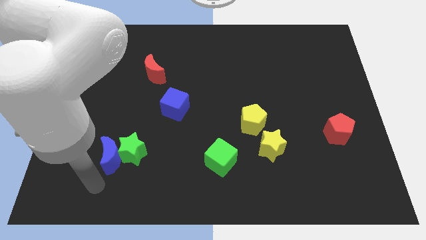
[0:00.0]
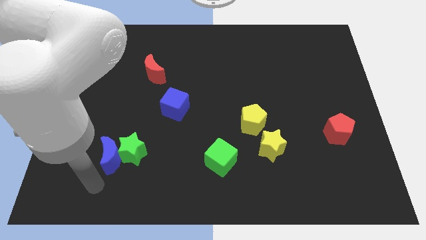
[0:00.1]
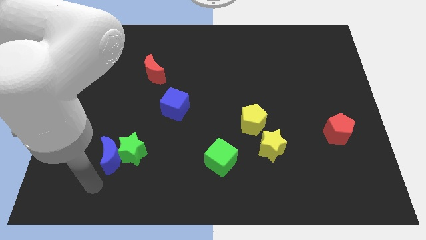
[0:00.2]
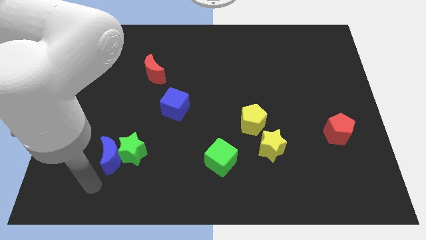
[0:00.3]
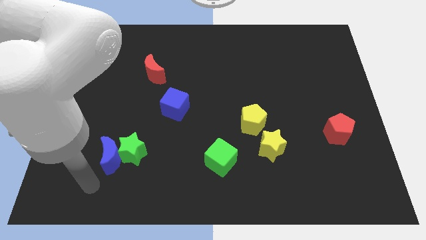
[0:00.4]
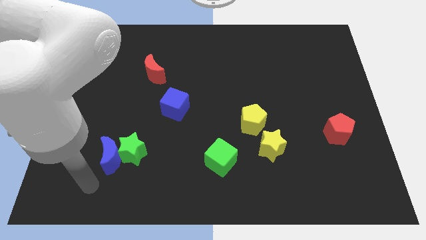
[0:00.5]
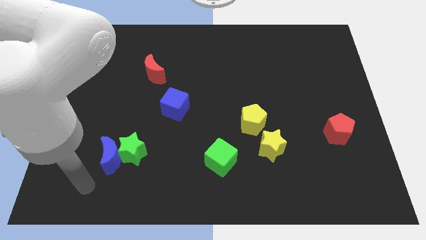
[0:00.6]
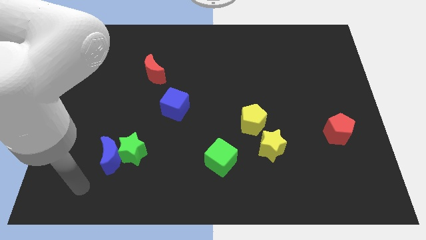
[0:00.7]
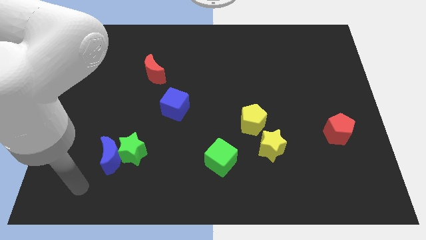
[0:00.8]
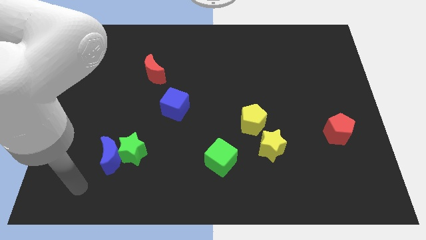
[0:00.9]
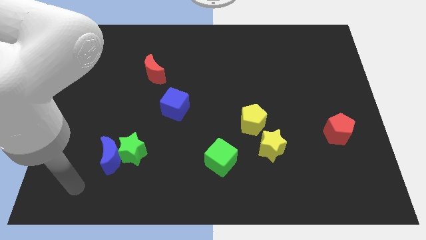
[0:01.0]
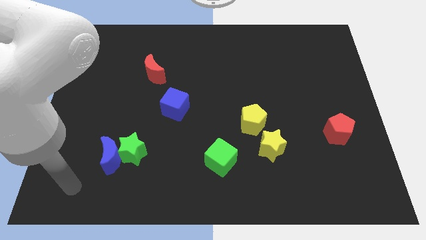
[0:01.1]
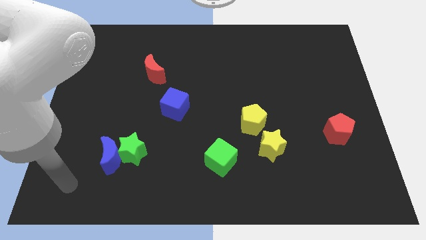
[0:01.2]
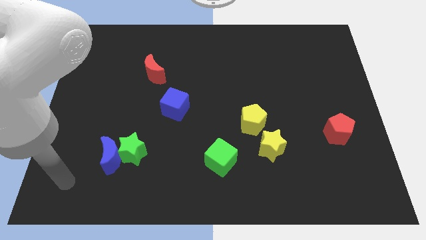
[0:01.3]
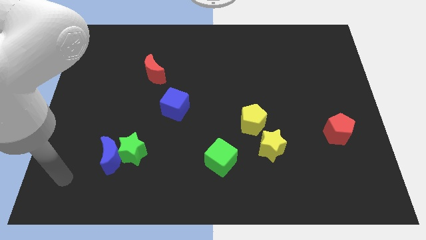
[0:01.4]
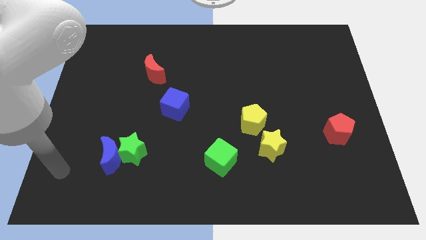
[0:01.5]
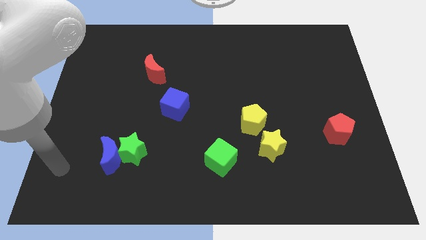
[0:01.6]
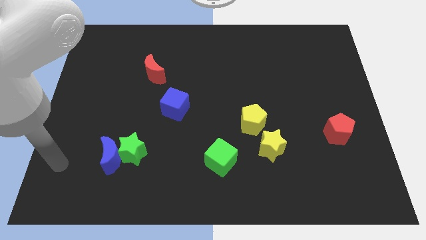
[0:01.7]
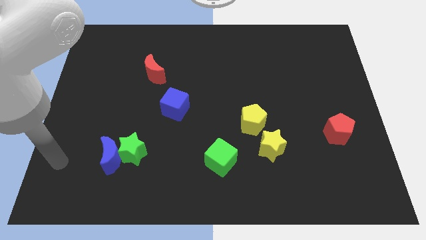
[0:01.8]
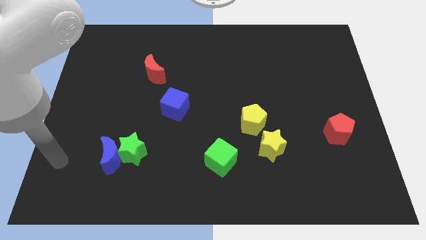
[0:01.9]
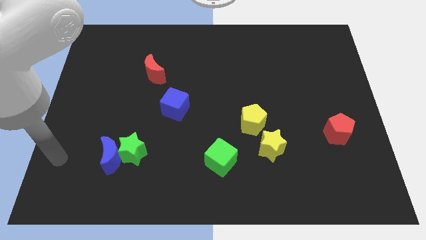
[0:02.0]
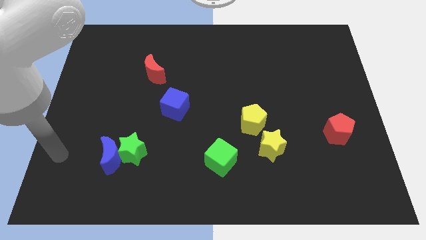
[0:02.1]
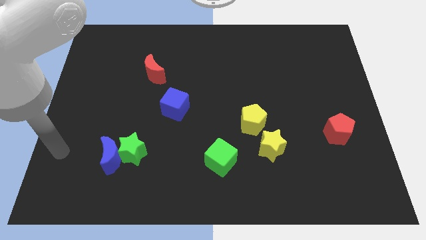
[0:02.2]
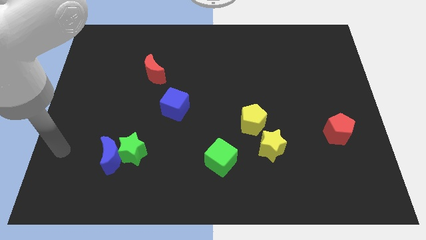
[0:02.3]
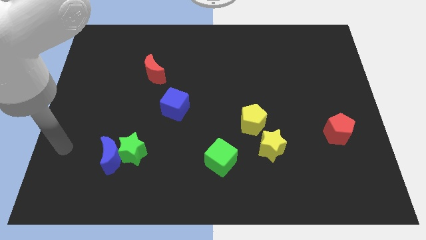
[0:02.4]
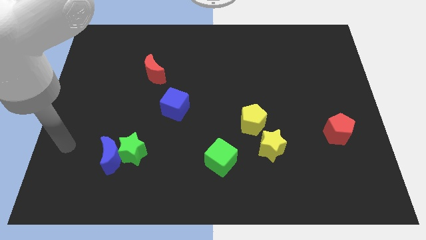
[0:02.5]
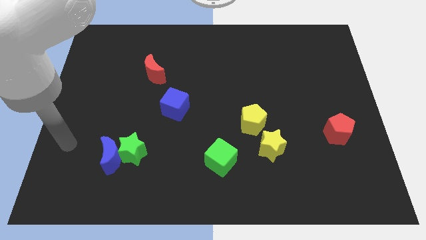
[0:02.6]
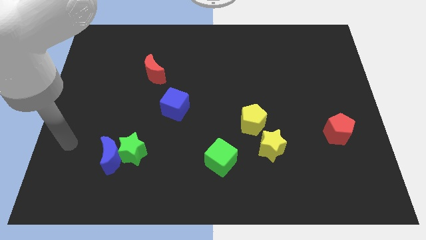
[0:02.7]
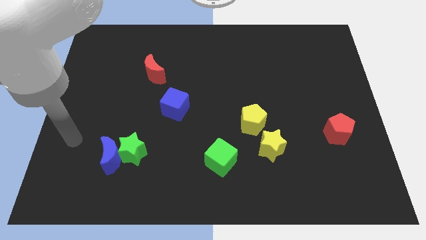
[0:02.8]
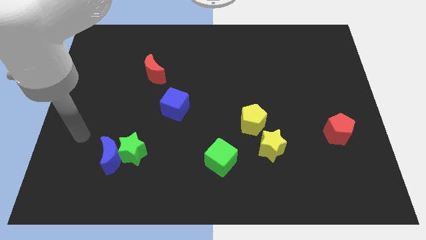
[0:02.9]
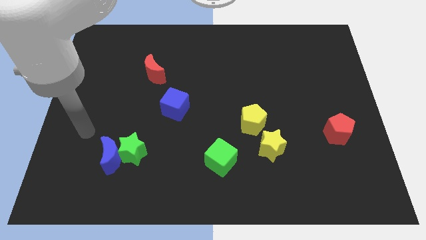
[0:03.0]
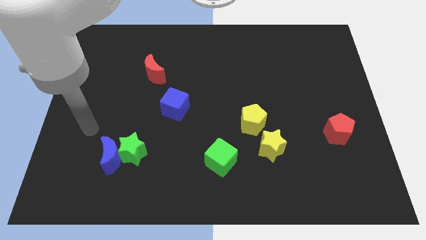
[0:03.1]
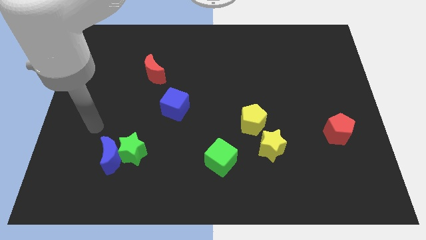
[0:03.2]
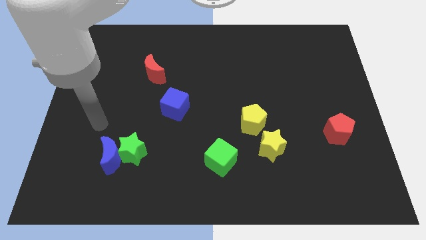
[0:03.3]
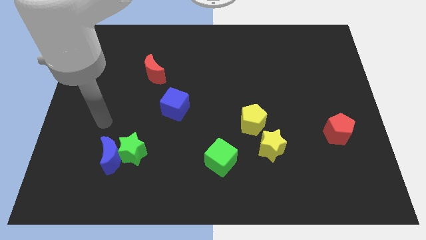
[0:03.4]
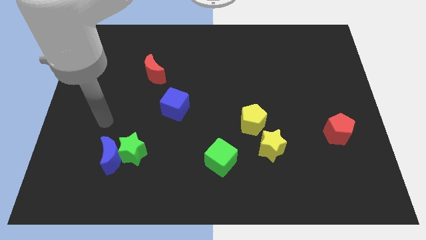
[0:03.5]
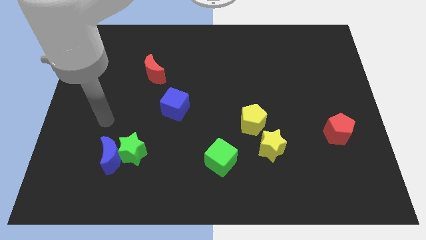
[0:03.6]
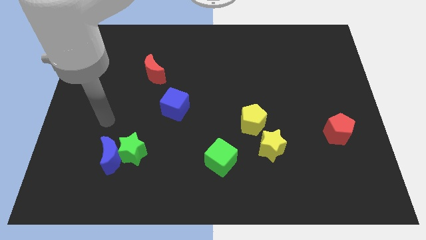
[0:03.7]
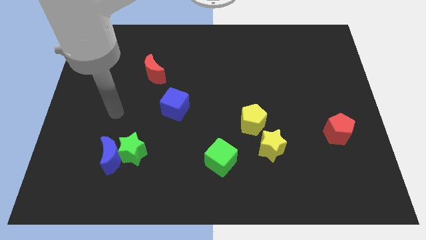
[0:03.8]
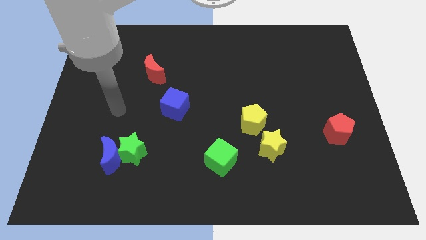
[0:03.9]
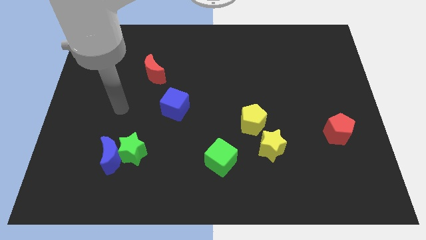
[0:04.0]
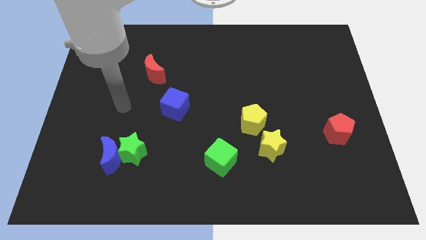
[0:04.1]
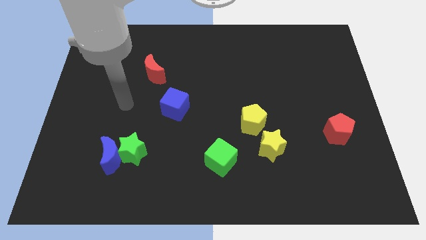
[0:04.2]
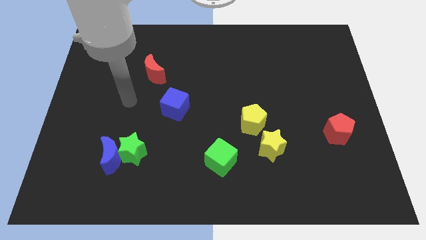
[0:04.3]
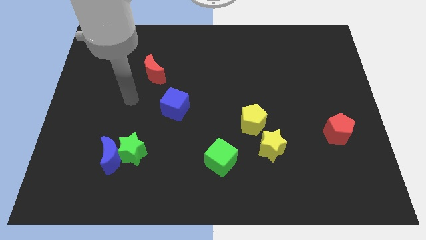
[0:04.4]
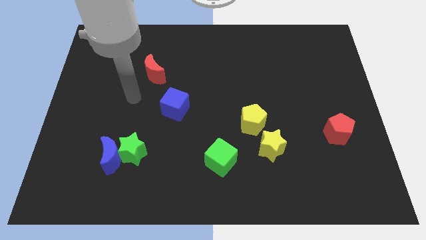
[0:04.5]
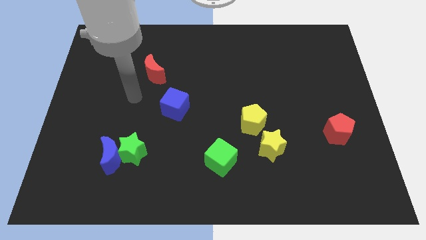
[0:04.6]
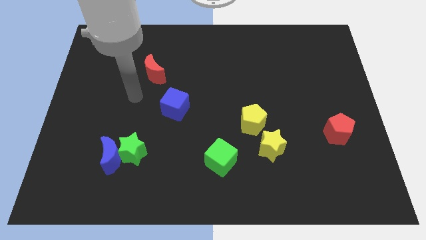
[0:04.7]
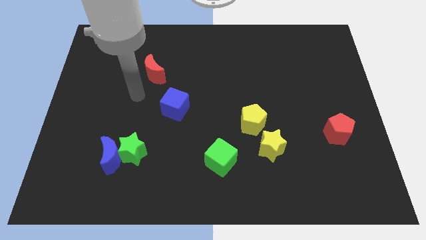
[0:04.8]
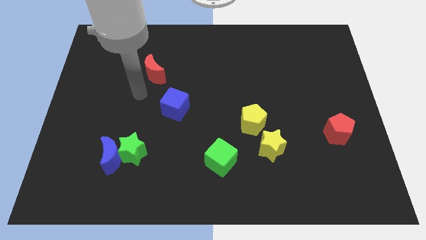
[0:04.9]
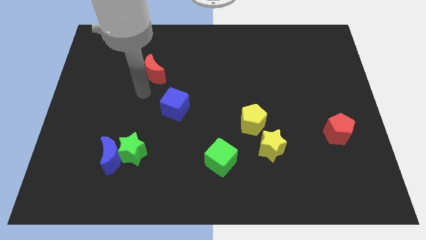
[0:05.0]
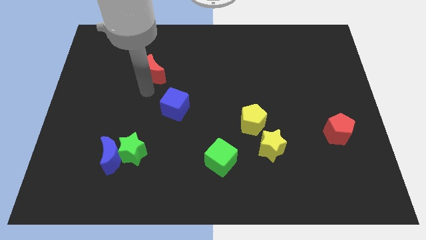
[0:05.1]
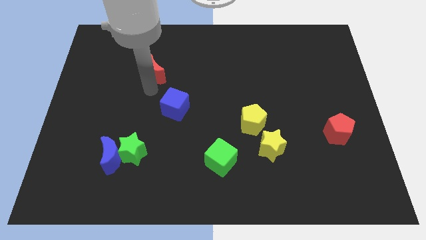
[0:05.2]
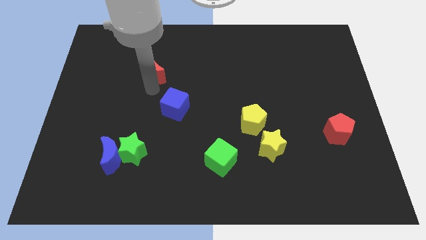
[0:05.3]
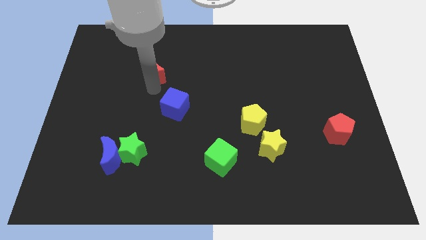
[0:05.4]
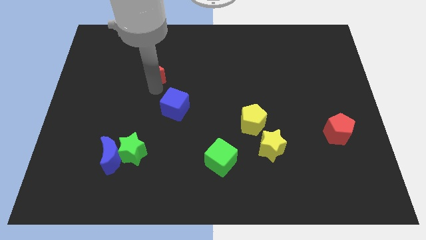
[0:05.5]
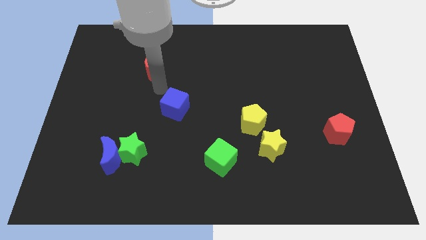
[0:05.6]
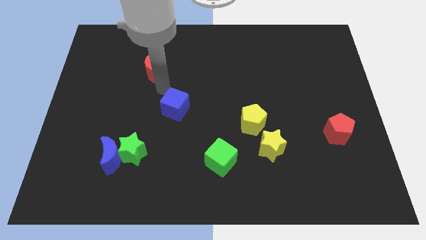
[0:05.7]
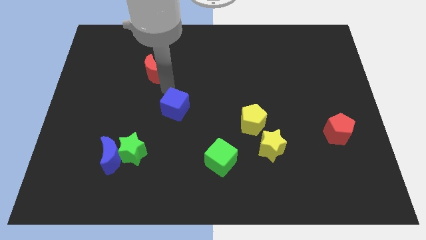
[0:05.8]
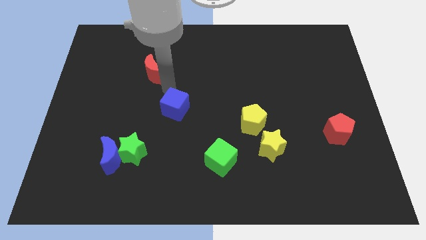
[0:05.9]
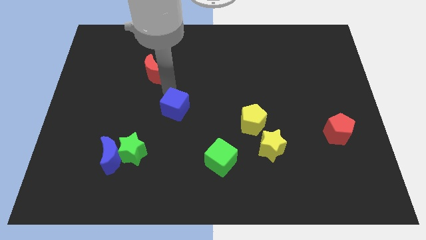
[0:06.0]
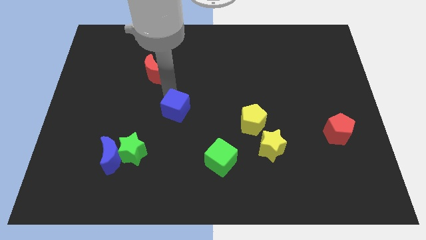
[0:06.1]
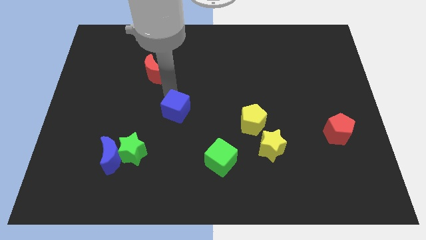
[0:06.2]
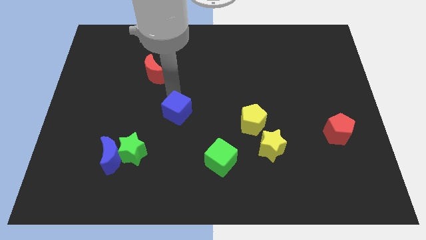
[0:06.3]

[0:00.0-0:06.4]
move your arm to the blue cube

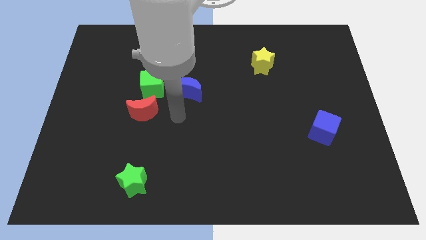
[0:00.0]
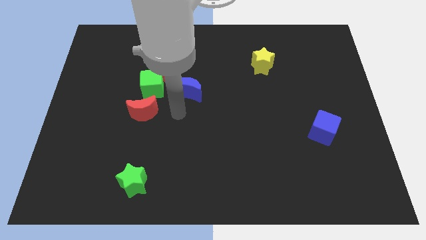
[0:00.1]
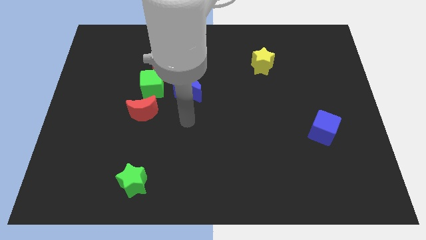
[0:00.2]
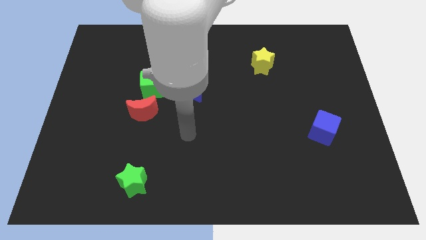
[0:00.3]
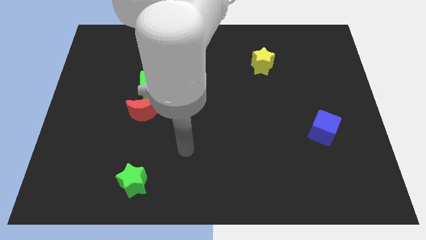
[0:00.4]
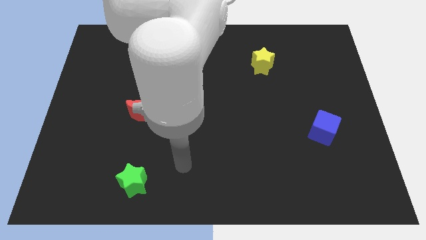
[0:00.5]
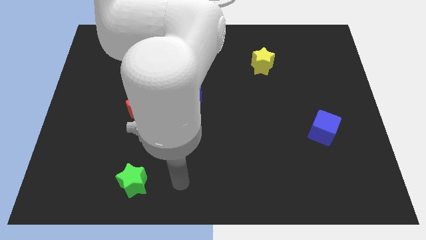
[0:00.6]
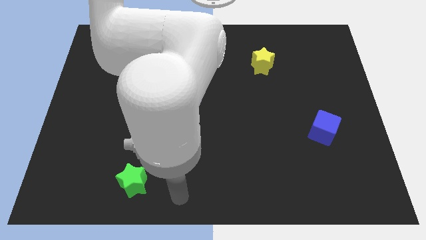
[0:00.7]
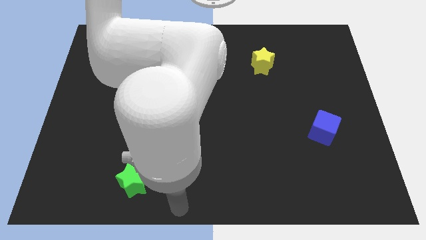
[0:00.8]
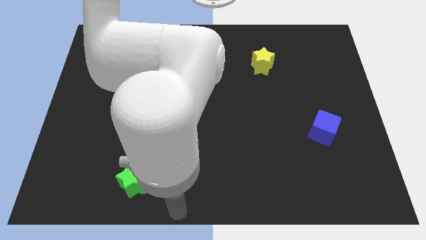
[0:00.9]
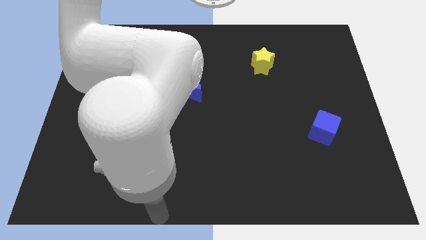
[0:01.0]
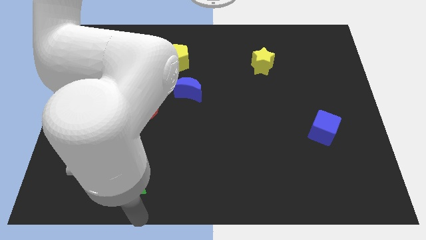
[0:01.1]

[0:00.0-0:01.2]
move your arm below the green star

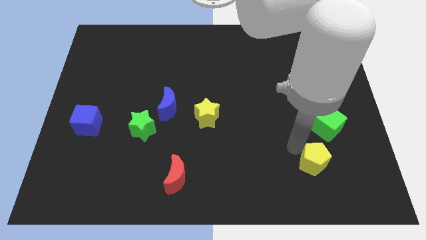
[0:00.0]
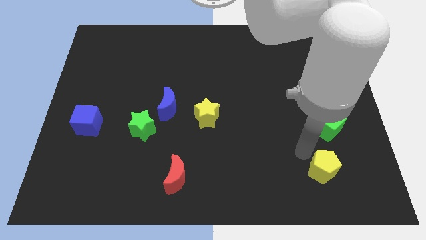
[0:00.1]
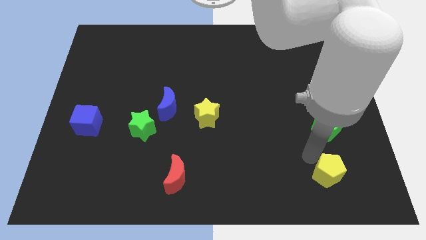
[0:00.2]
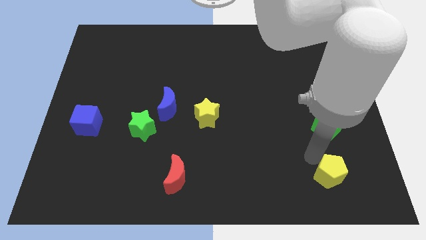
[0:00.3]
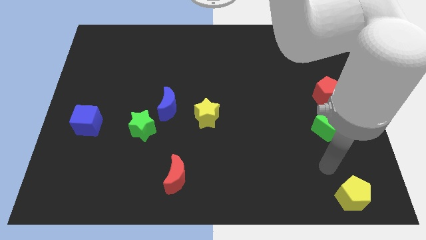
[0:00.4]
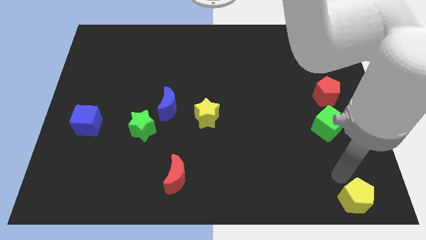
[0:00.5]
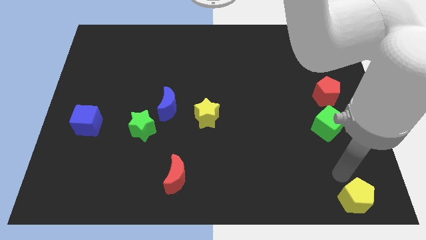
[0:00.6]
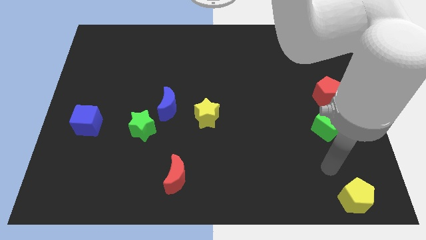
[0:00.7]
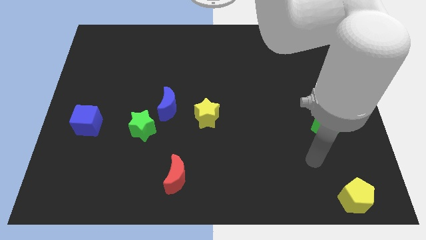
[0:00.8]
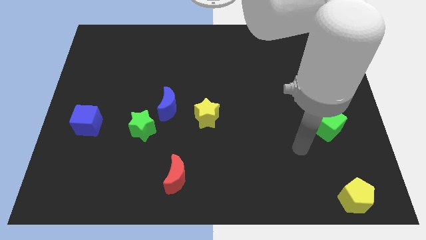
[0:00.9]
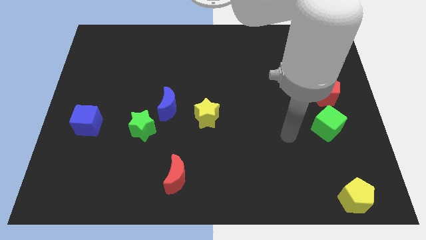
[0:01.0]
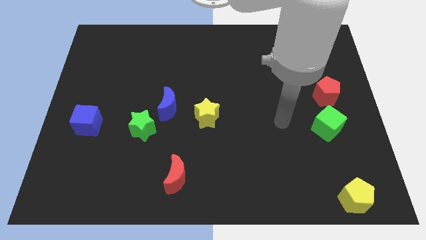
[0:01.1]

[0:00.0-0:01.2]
push the yellow pentagon to the bottom right side of the board
